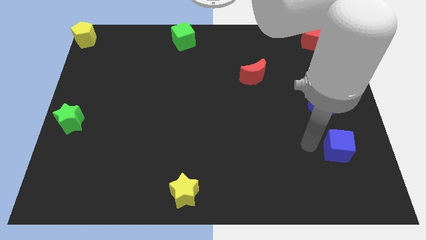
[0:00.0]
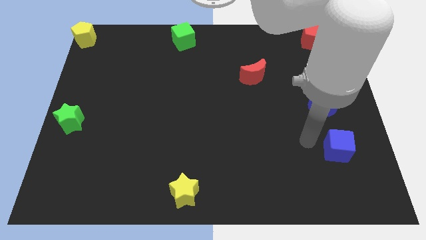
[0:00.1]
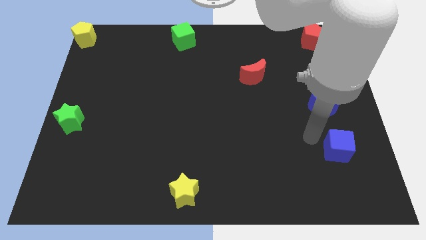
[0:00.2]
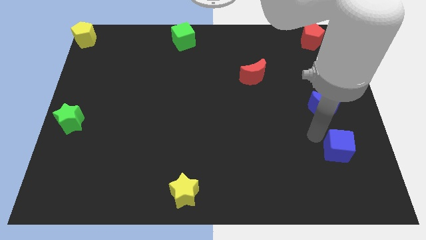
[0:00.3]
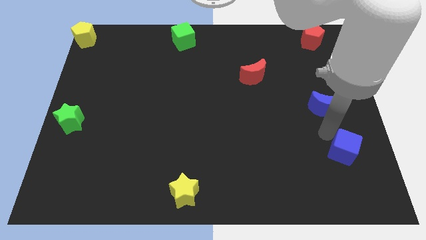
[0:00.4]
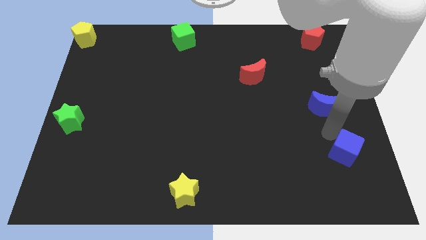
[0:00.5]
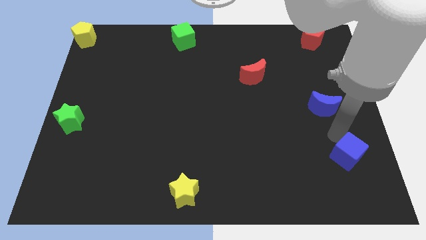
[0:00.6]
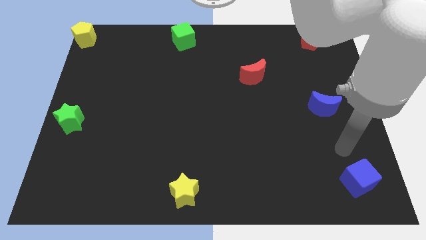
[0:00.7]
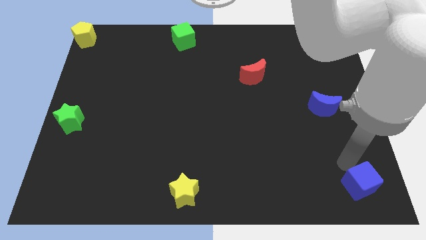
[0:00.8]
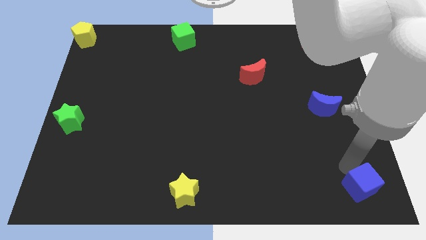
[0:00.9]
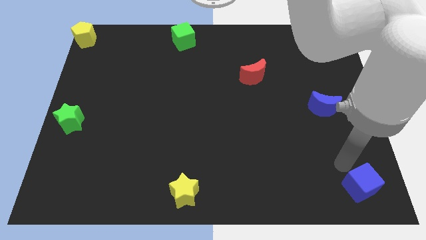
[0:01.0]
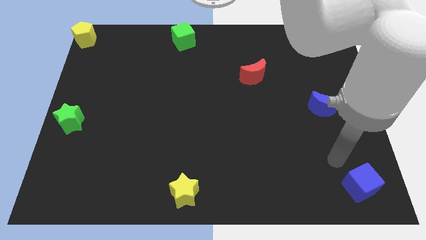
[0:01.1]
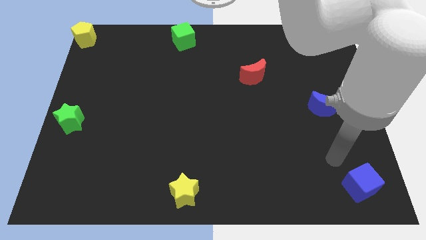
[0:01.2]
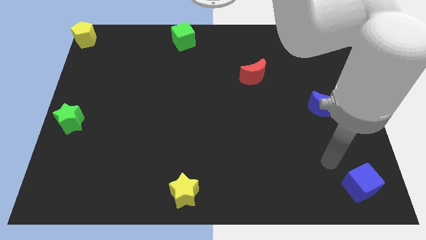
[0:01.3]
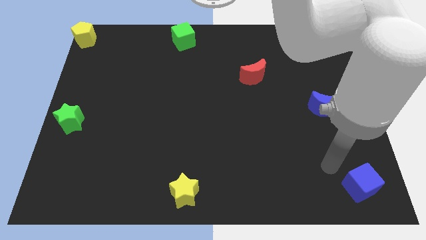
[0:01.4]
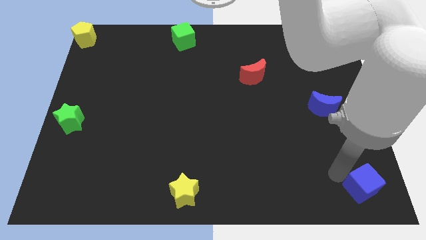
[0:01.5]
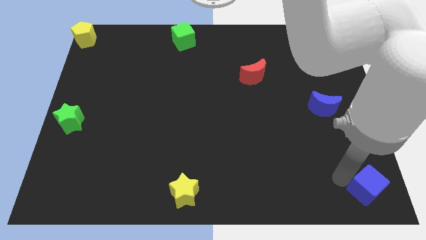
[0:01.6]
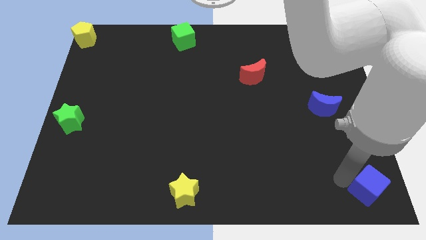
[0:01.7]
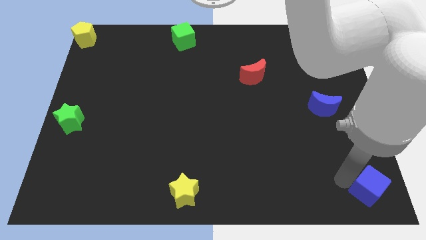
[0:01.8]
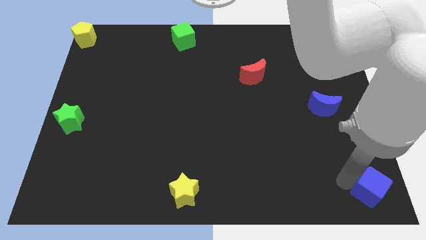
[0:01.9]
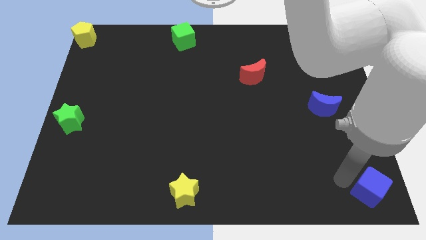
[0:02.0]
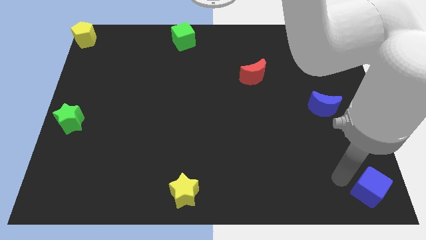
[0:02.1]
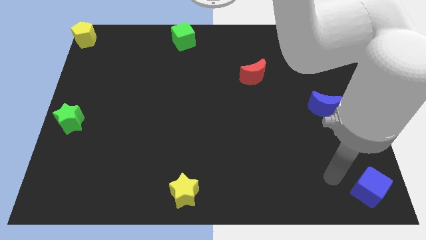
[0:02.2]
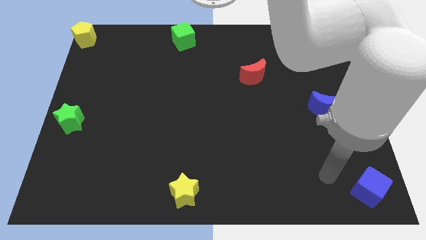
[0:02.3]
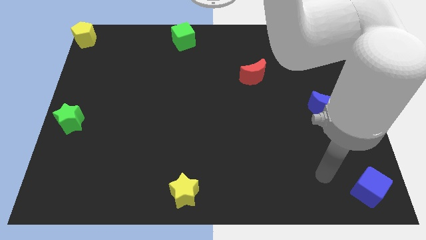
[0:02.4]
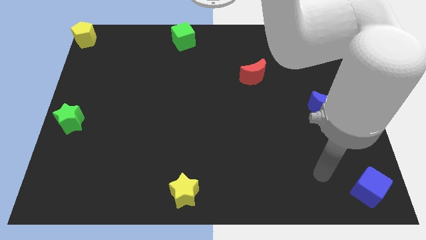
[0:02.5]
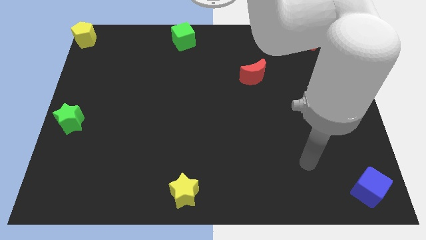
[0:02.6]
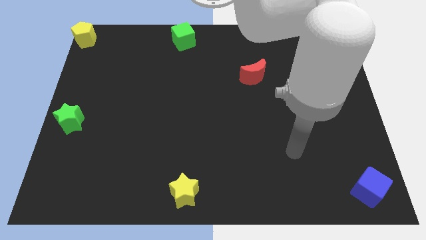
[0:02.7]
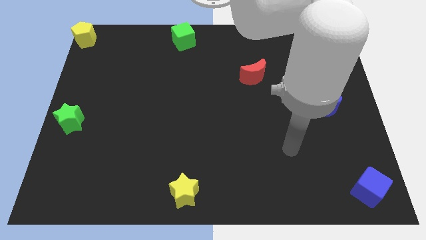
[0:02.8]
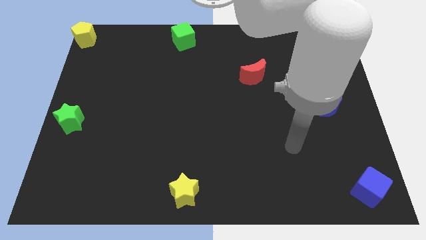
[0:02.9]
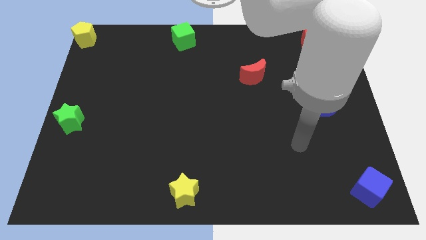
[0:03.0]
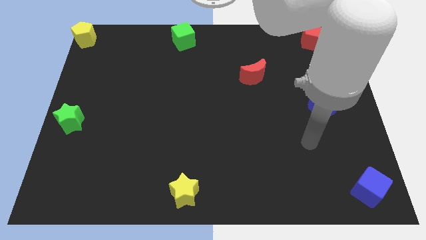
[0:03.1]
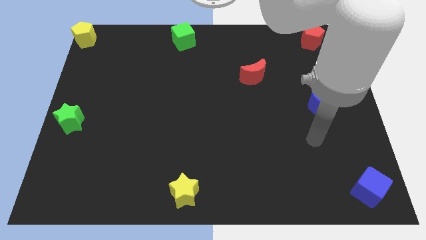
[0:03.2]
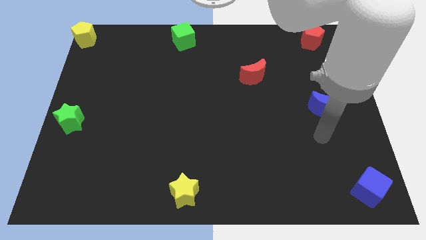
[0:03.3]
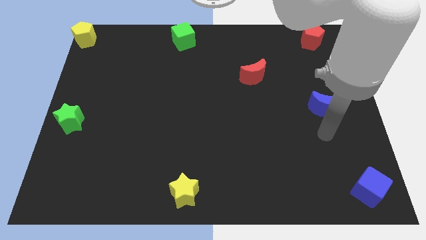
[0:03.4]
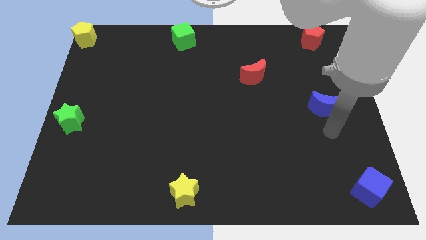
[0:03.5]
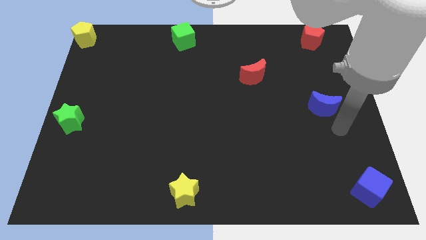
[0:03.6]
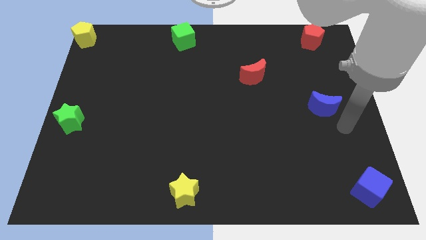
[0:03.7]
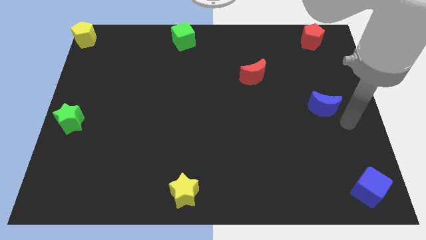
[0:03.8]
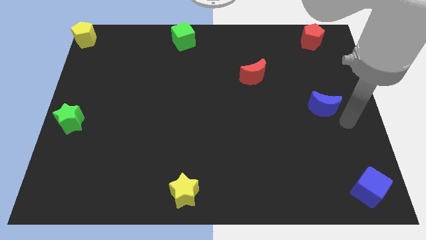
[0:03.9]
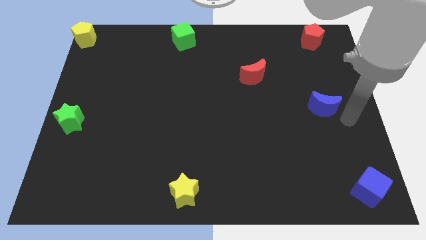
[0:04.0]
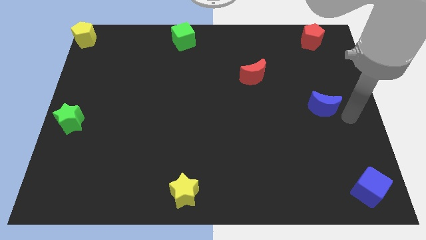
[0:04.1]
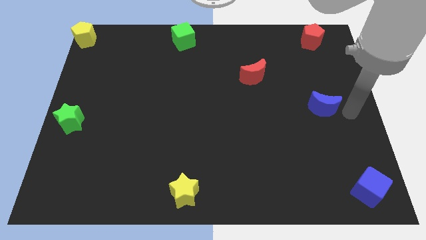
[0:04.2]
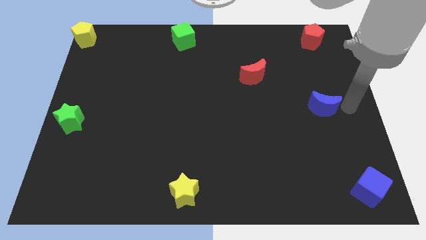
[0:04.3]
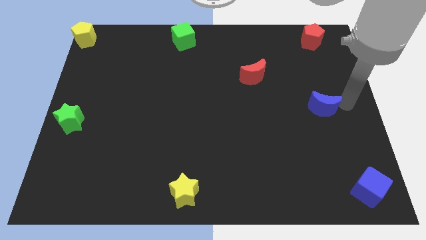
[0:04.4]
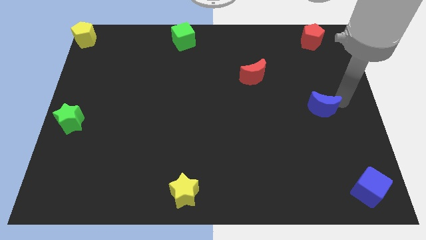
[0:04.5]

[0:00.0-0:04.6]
place the blue cube towards the bottom right corner of the board

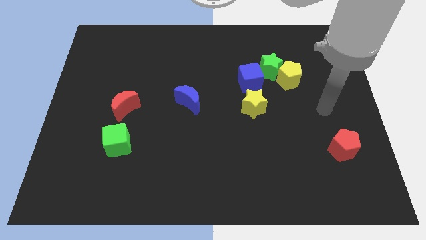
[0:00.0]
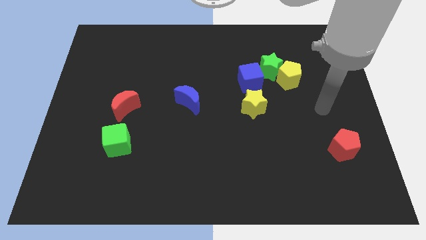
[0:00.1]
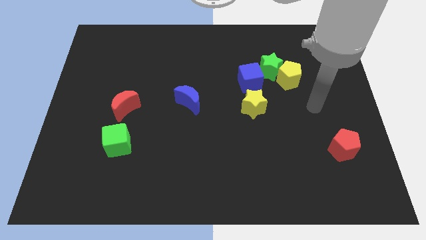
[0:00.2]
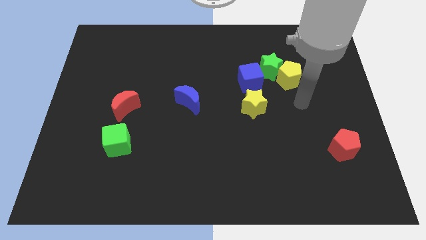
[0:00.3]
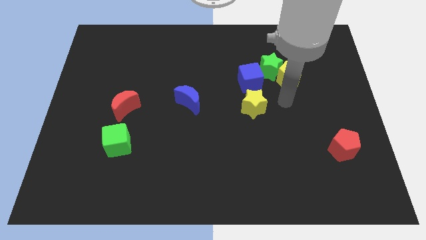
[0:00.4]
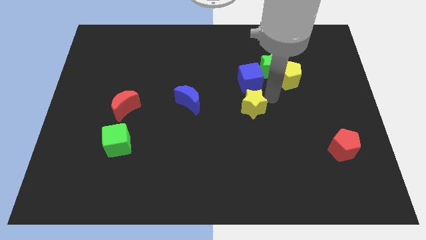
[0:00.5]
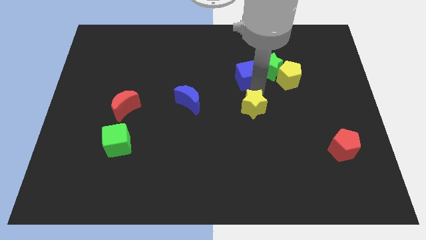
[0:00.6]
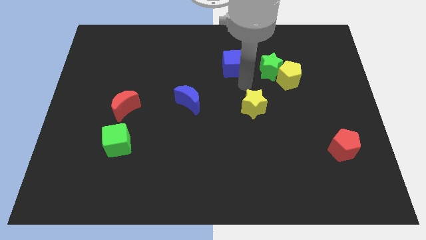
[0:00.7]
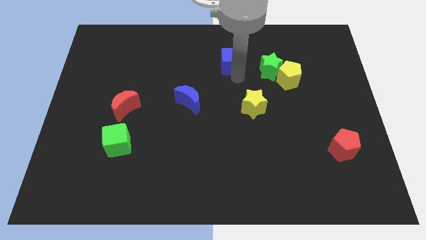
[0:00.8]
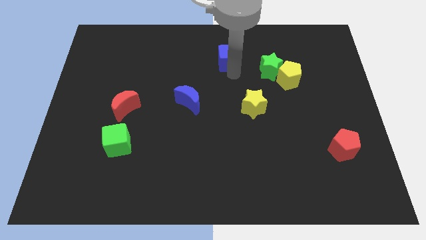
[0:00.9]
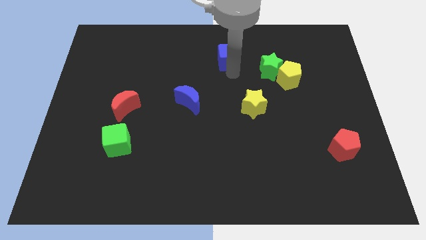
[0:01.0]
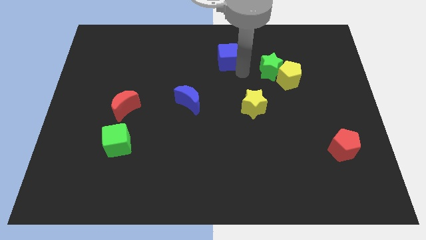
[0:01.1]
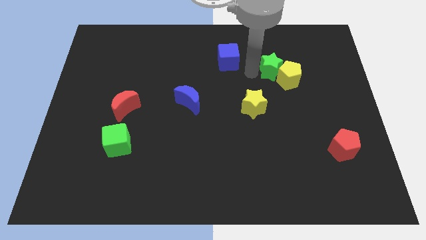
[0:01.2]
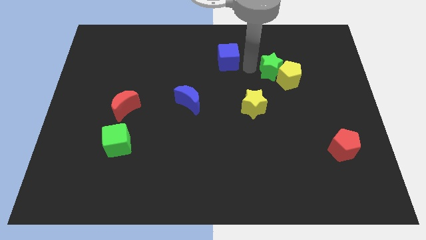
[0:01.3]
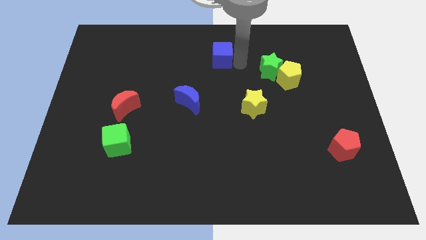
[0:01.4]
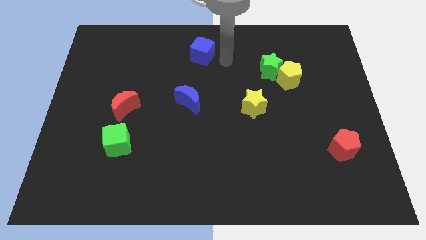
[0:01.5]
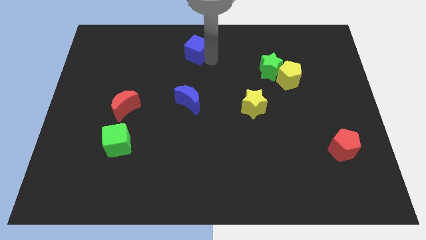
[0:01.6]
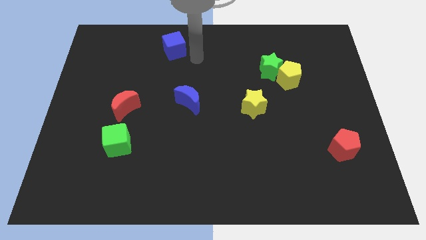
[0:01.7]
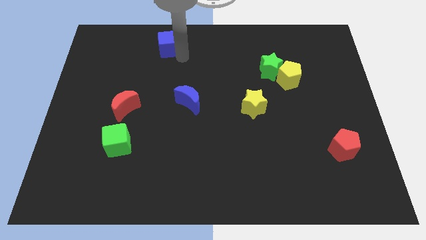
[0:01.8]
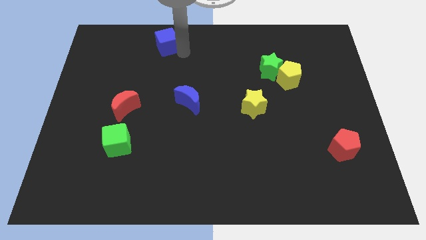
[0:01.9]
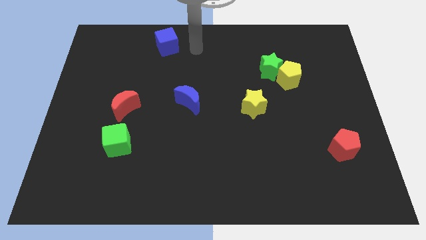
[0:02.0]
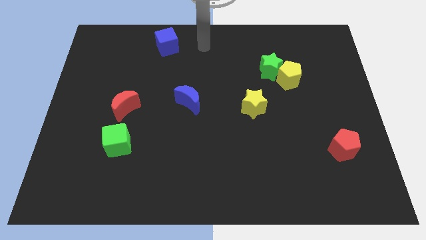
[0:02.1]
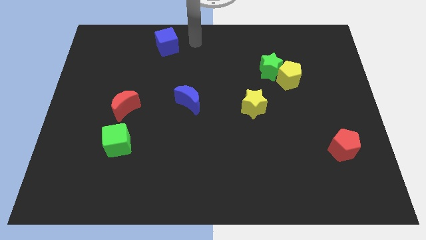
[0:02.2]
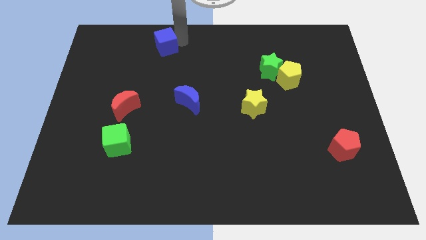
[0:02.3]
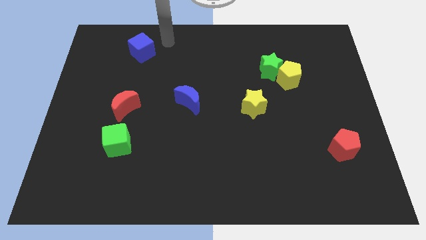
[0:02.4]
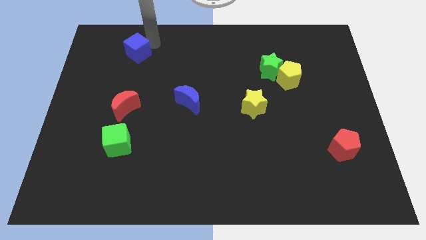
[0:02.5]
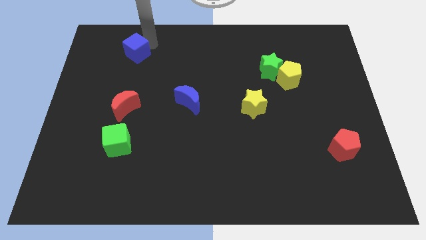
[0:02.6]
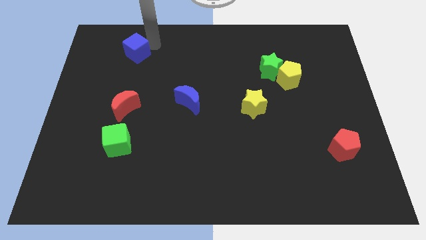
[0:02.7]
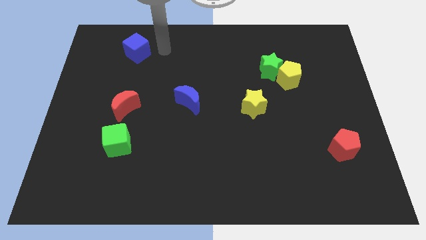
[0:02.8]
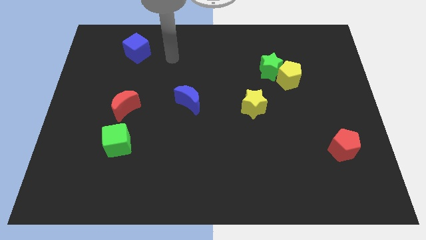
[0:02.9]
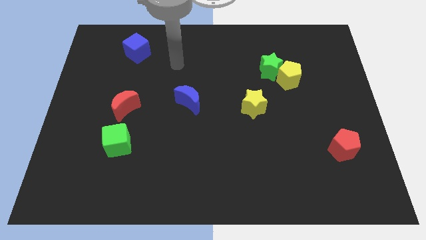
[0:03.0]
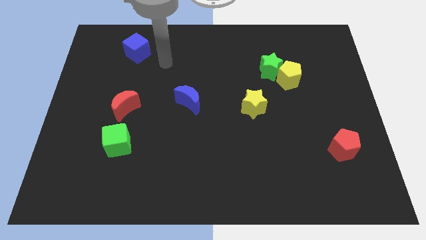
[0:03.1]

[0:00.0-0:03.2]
move the blue cube vertically to the top of the red crescent

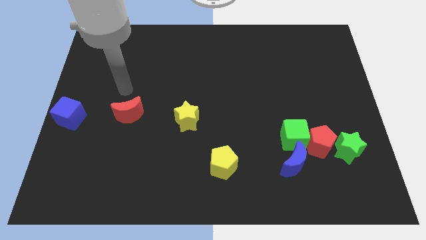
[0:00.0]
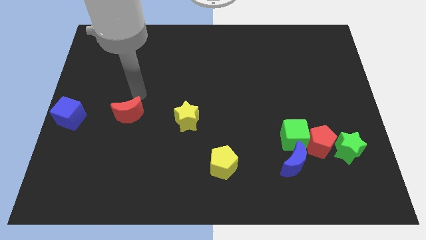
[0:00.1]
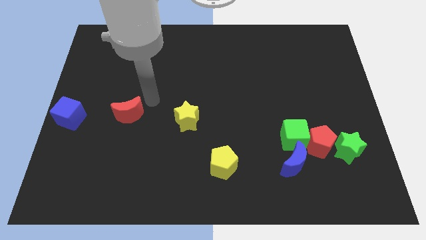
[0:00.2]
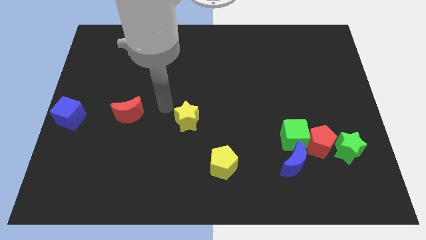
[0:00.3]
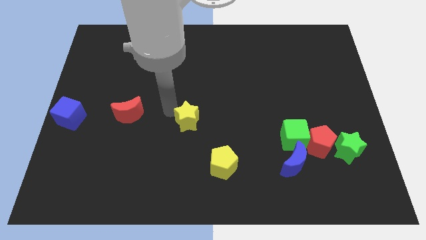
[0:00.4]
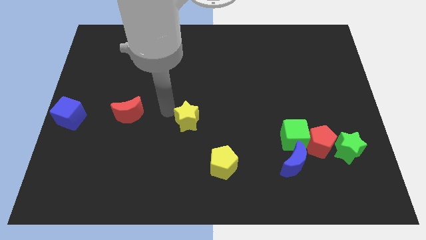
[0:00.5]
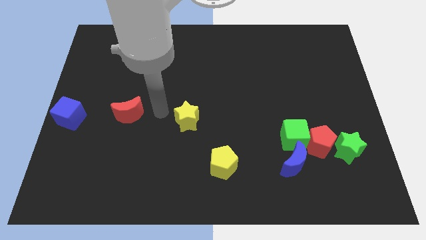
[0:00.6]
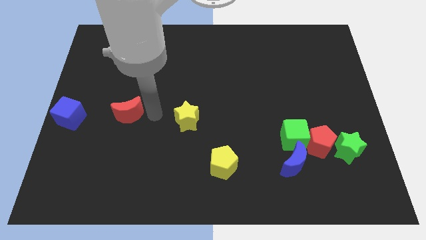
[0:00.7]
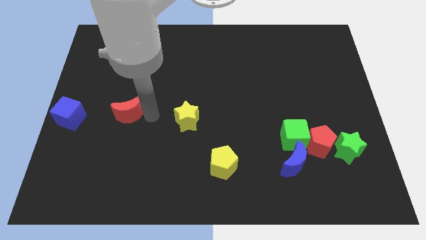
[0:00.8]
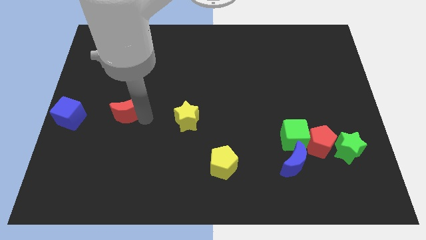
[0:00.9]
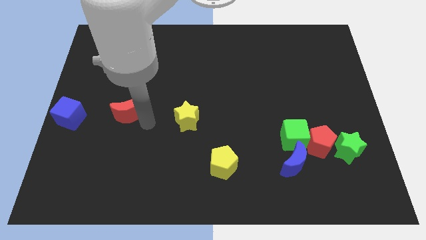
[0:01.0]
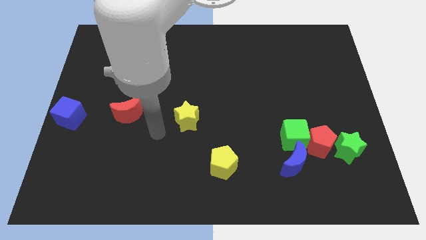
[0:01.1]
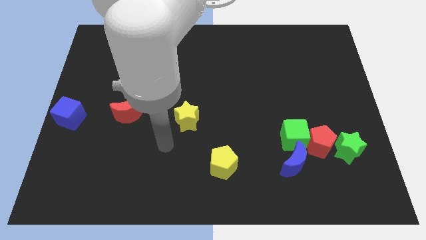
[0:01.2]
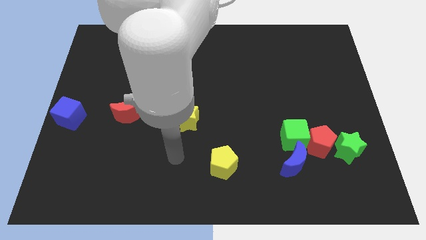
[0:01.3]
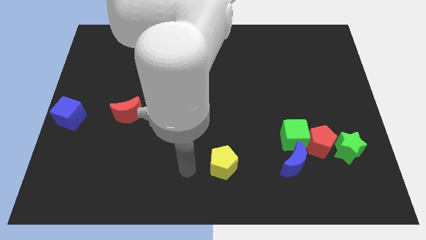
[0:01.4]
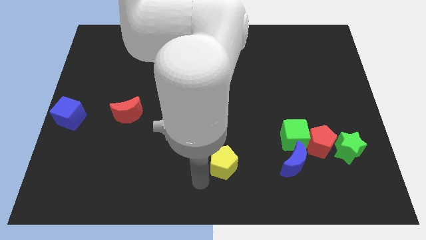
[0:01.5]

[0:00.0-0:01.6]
push the red crescent slightly to the left side of the board
